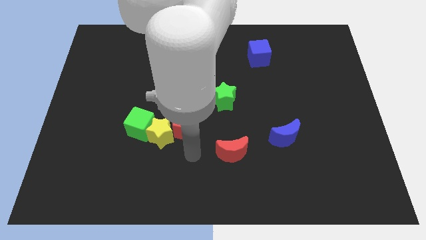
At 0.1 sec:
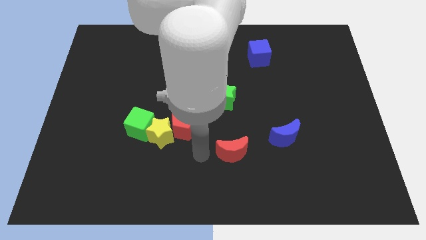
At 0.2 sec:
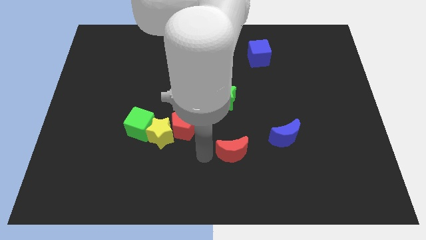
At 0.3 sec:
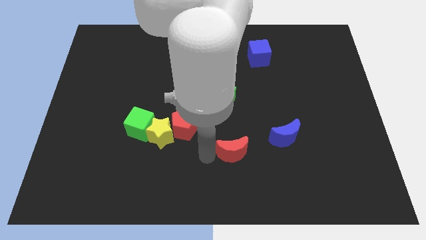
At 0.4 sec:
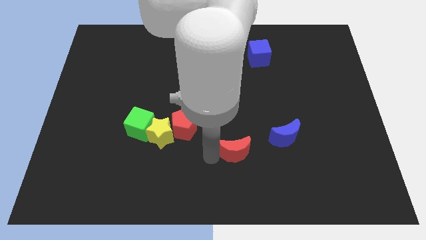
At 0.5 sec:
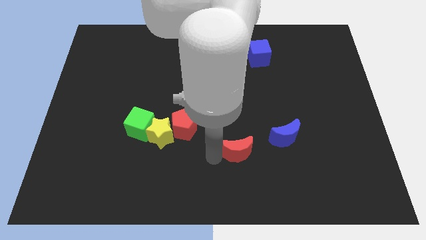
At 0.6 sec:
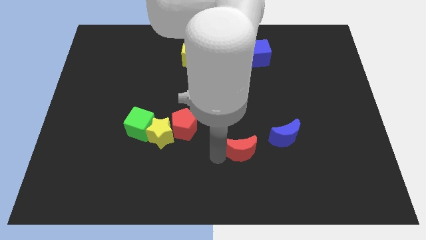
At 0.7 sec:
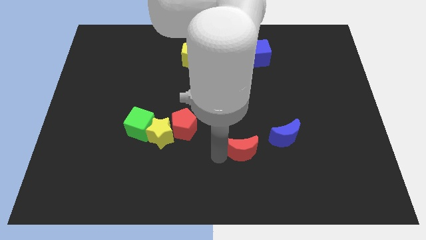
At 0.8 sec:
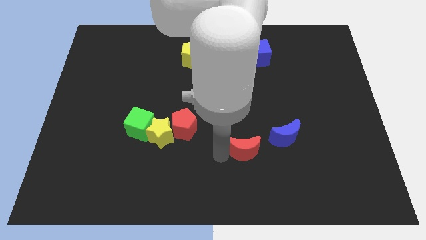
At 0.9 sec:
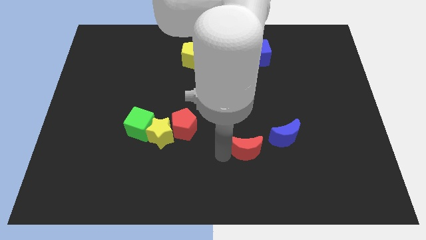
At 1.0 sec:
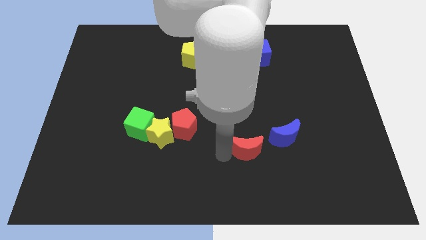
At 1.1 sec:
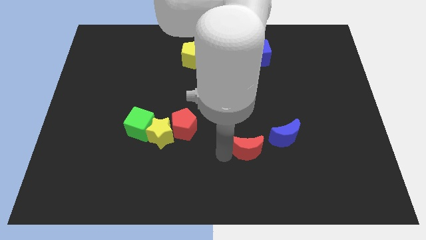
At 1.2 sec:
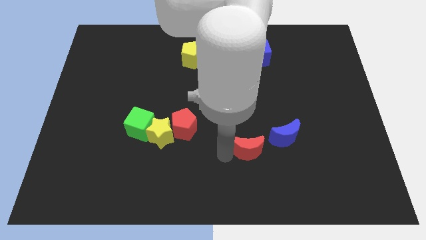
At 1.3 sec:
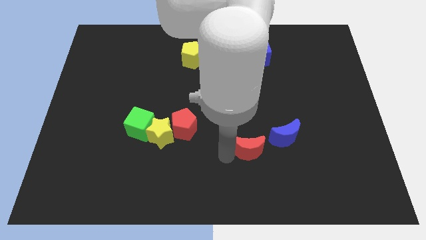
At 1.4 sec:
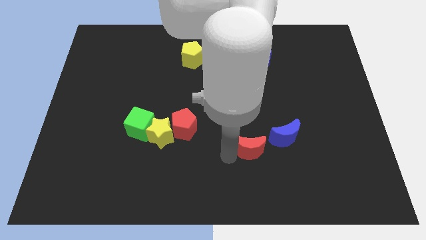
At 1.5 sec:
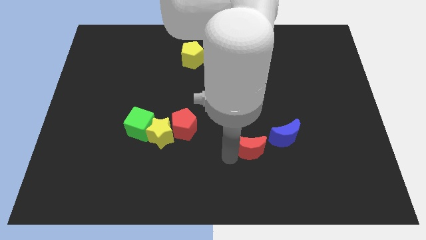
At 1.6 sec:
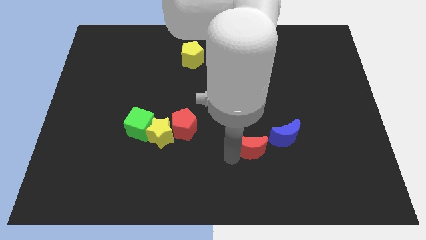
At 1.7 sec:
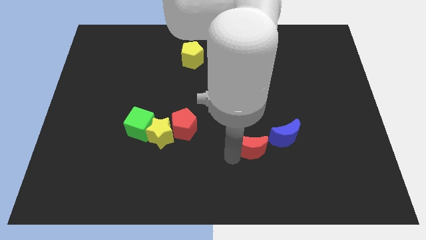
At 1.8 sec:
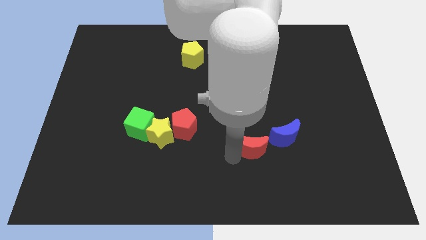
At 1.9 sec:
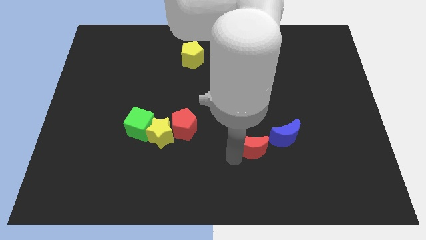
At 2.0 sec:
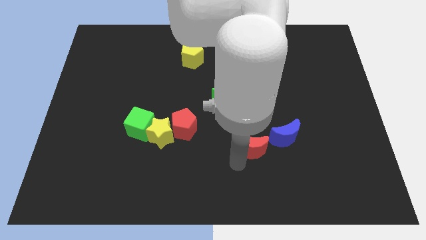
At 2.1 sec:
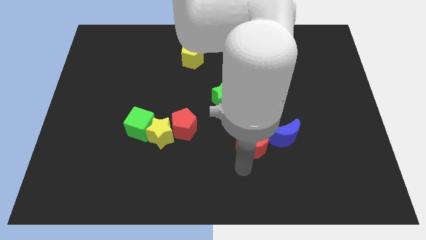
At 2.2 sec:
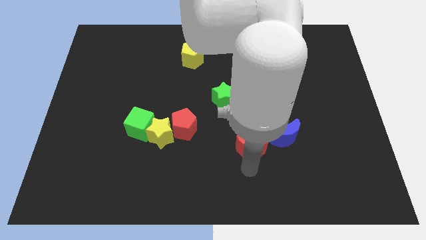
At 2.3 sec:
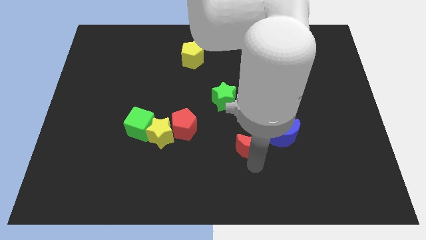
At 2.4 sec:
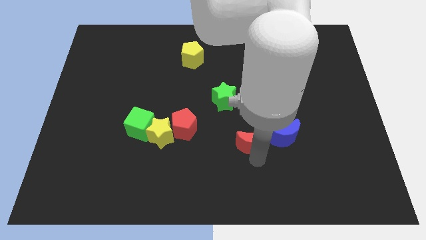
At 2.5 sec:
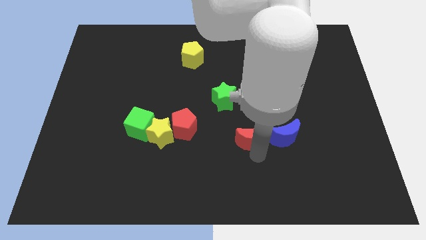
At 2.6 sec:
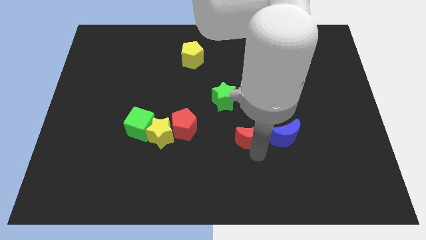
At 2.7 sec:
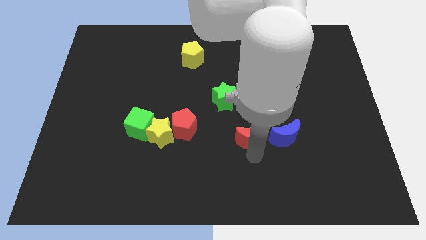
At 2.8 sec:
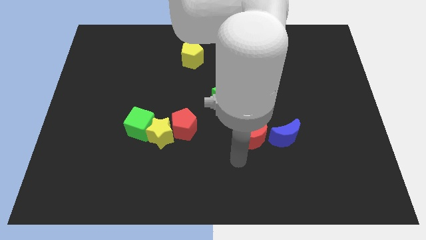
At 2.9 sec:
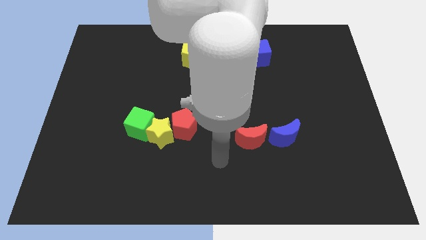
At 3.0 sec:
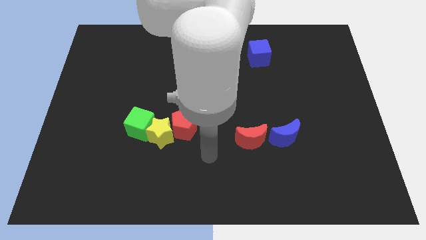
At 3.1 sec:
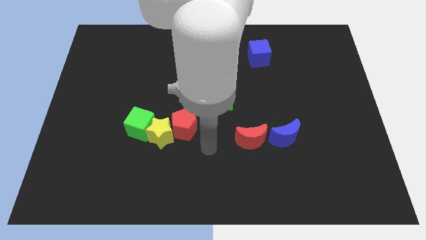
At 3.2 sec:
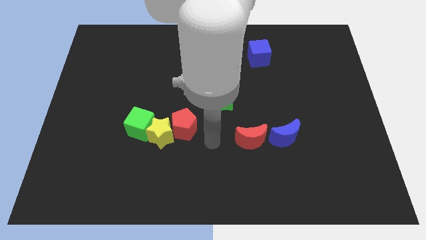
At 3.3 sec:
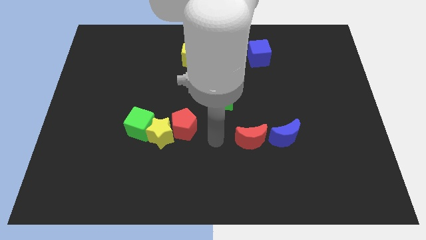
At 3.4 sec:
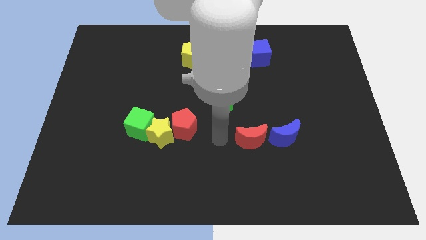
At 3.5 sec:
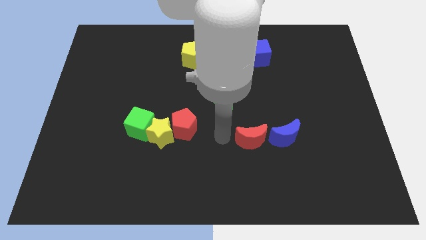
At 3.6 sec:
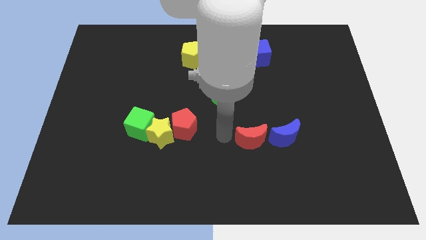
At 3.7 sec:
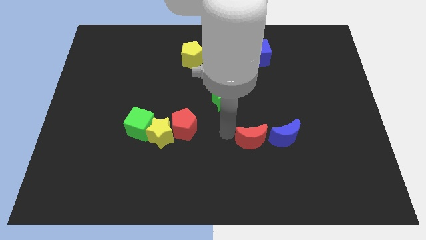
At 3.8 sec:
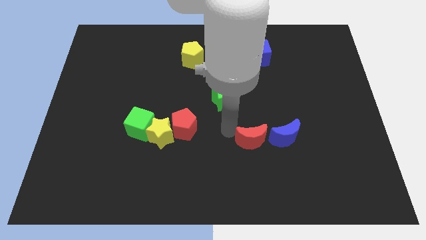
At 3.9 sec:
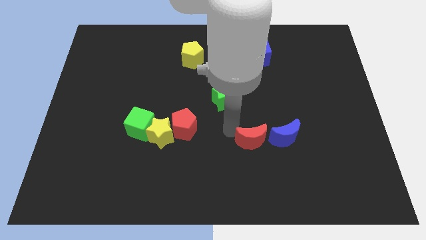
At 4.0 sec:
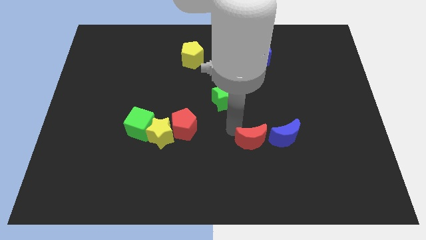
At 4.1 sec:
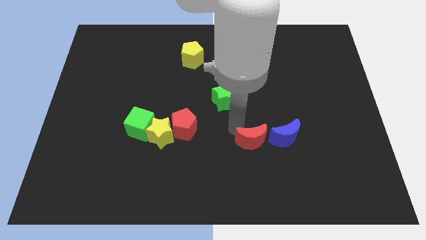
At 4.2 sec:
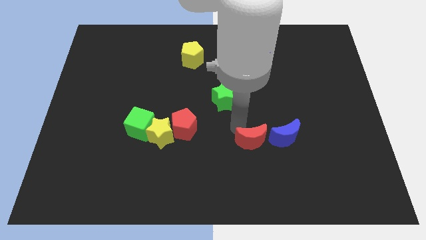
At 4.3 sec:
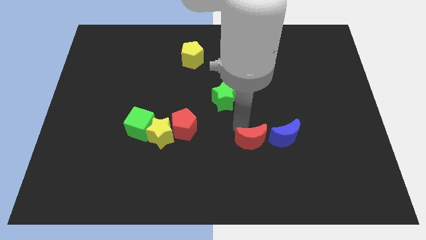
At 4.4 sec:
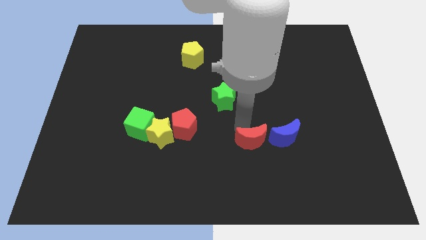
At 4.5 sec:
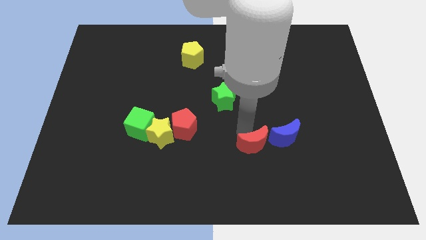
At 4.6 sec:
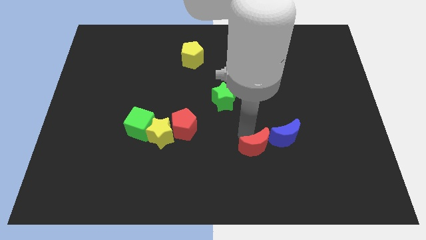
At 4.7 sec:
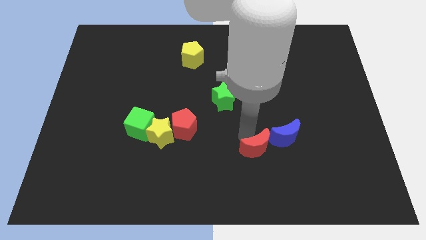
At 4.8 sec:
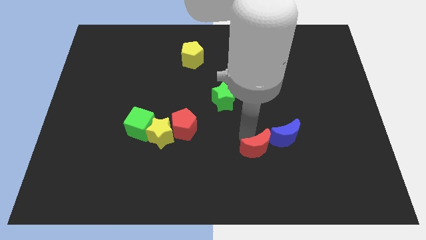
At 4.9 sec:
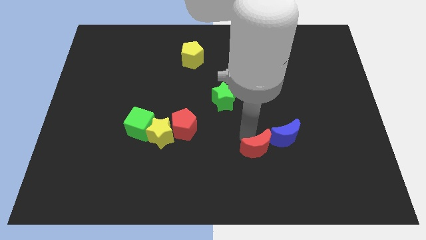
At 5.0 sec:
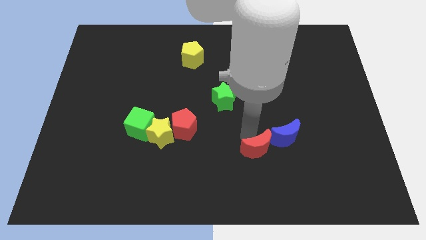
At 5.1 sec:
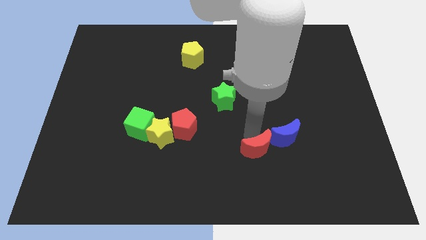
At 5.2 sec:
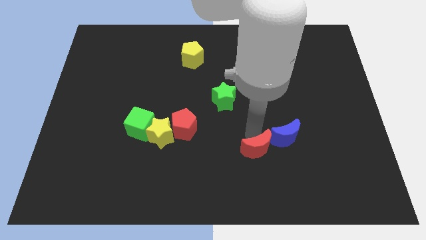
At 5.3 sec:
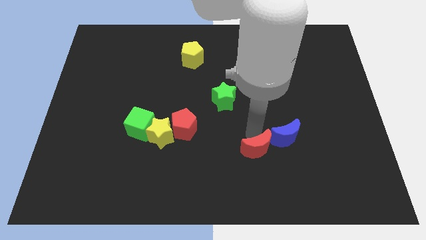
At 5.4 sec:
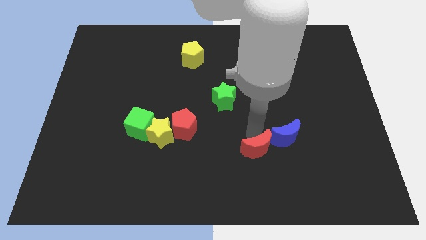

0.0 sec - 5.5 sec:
place red crescent diagonally bottom right to the red pentagon

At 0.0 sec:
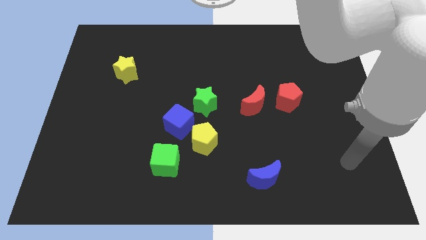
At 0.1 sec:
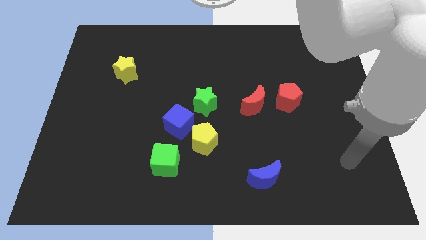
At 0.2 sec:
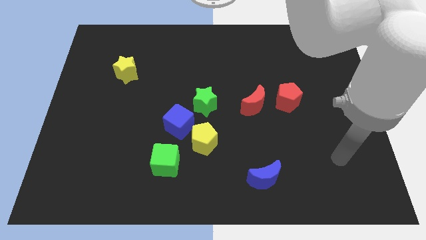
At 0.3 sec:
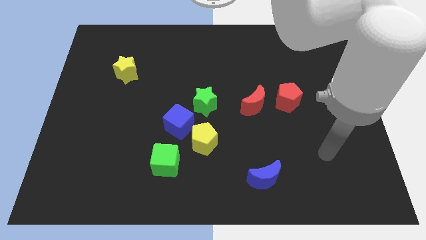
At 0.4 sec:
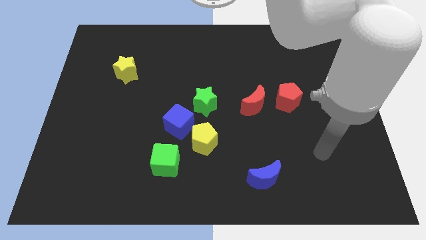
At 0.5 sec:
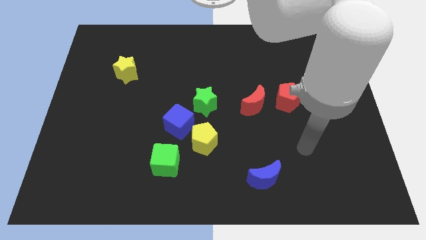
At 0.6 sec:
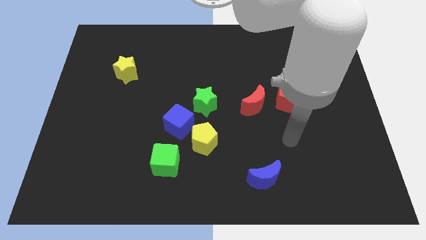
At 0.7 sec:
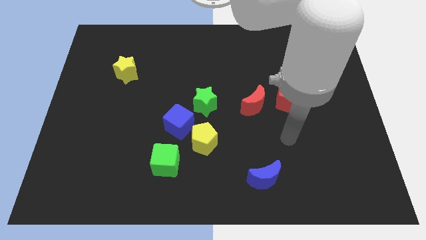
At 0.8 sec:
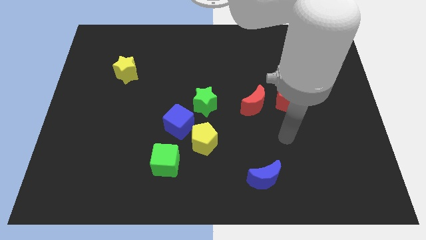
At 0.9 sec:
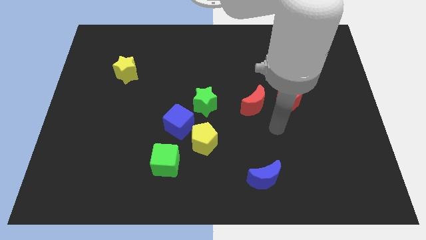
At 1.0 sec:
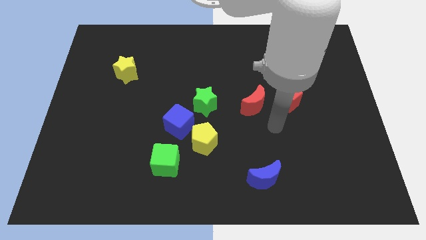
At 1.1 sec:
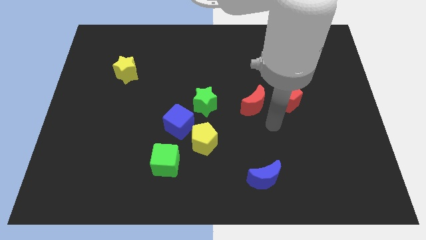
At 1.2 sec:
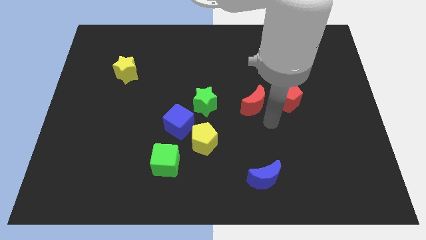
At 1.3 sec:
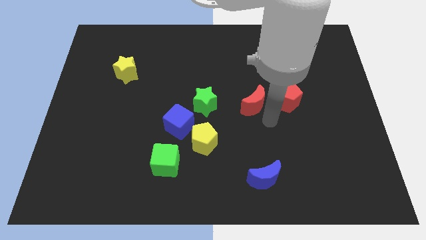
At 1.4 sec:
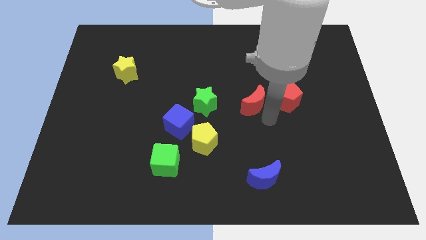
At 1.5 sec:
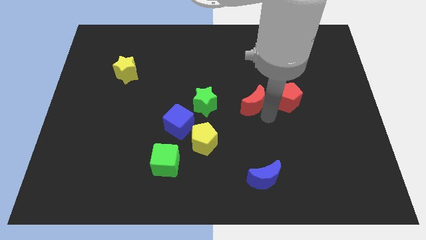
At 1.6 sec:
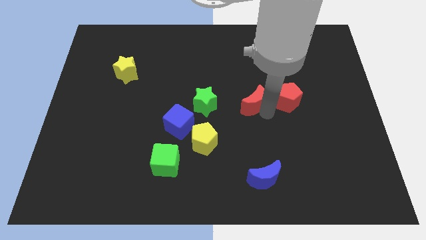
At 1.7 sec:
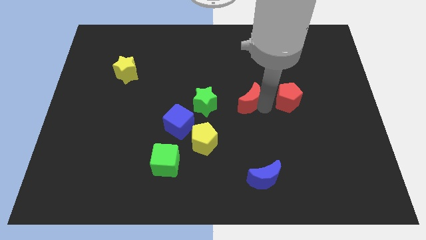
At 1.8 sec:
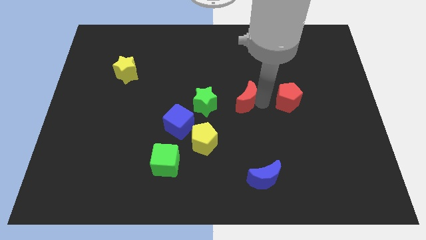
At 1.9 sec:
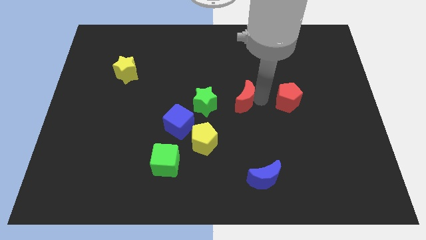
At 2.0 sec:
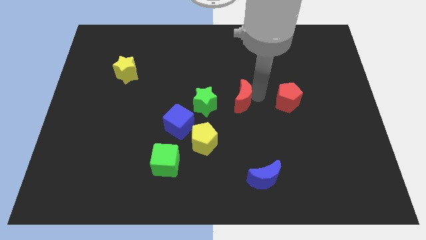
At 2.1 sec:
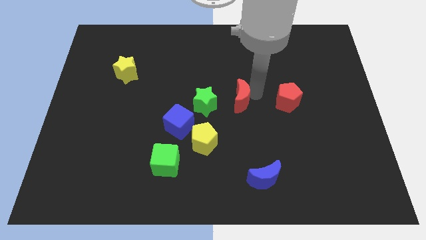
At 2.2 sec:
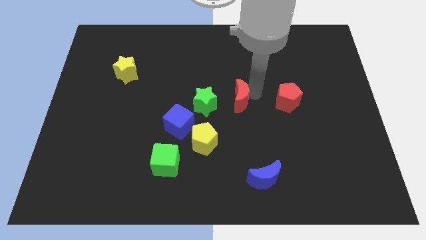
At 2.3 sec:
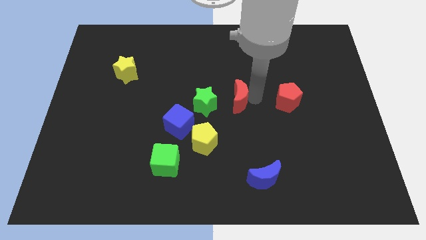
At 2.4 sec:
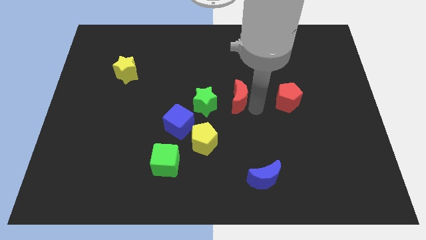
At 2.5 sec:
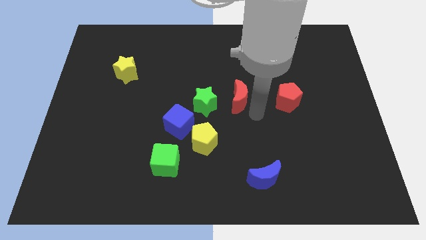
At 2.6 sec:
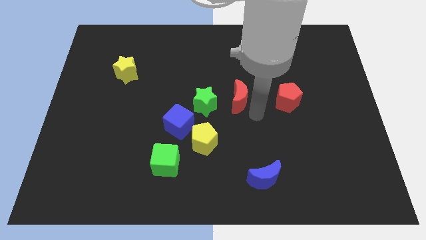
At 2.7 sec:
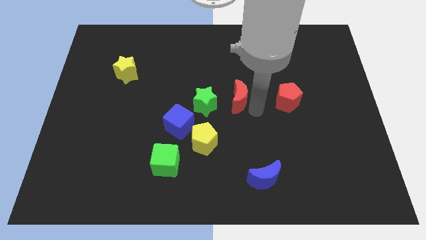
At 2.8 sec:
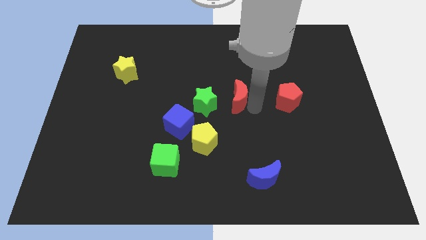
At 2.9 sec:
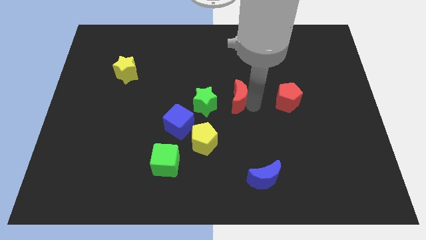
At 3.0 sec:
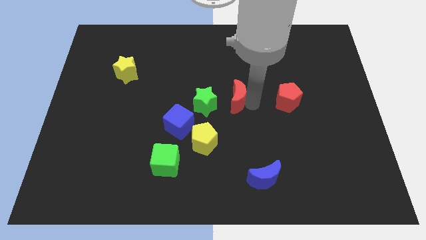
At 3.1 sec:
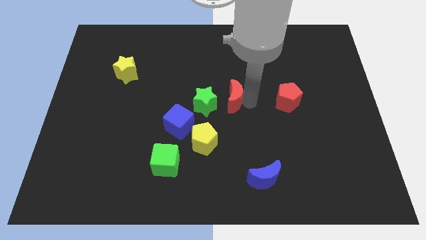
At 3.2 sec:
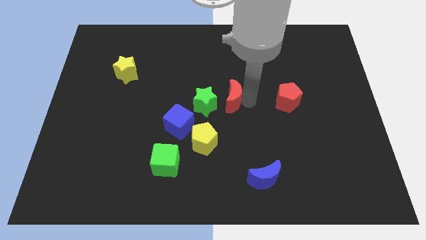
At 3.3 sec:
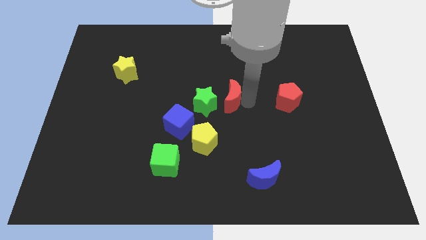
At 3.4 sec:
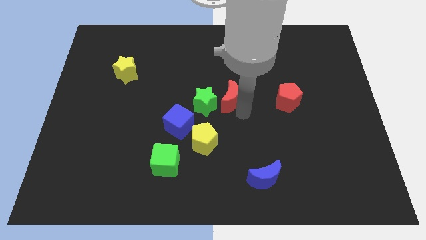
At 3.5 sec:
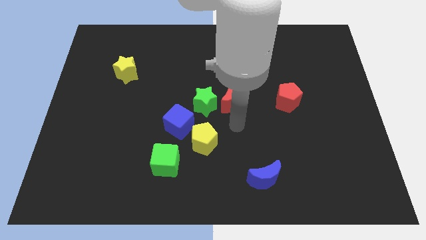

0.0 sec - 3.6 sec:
push red crescent towards green star
